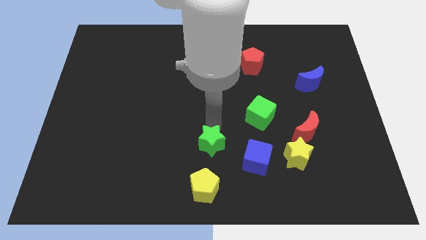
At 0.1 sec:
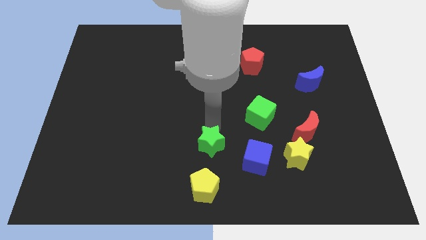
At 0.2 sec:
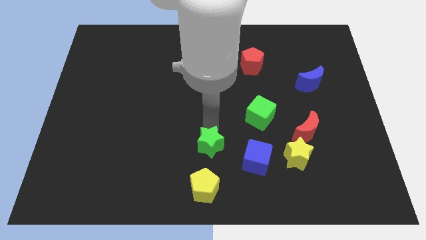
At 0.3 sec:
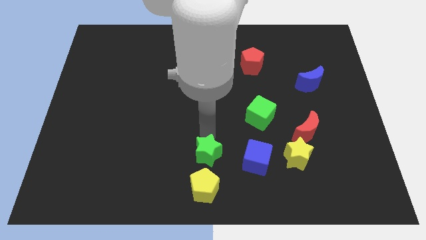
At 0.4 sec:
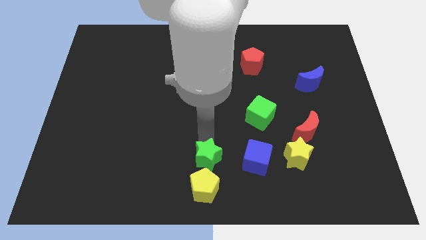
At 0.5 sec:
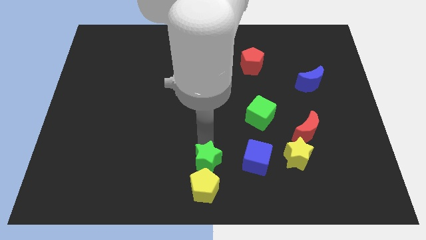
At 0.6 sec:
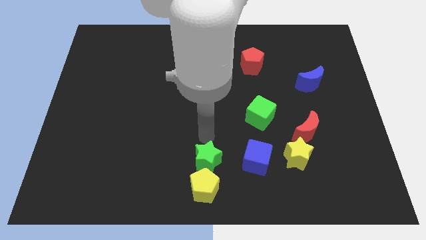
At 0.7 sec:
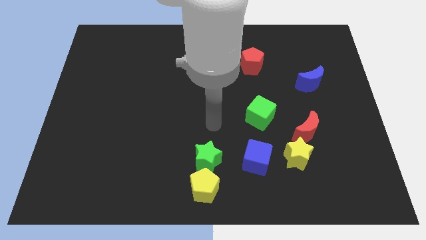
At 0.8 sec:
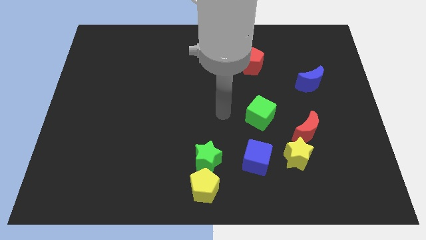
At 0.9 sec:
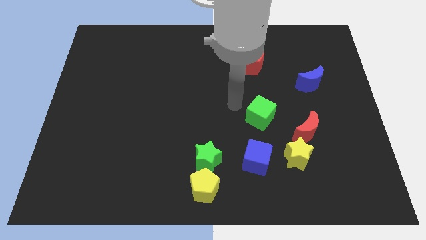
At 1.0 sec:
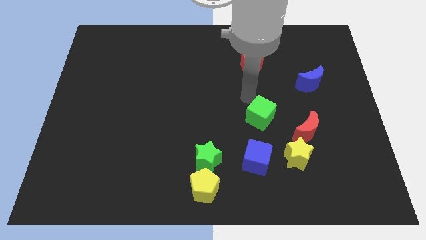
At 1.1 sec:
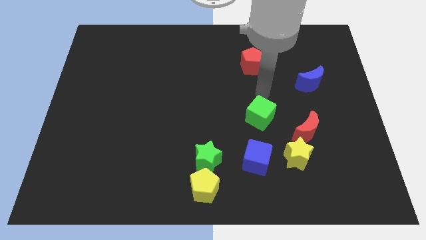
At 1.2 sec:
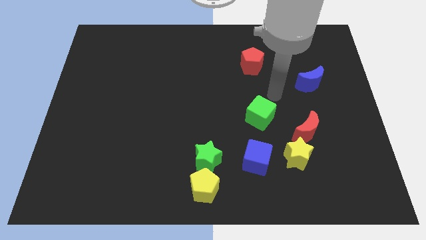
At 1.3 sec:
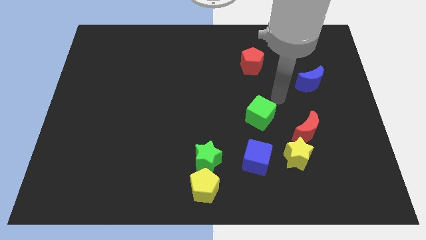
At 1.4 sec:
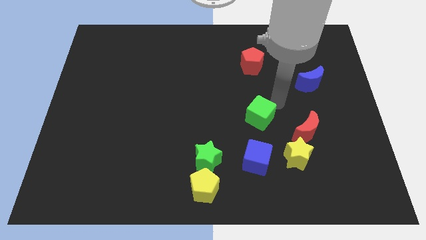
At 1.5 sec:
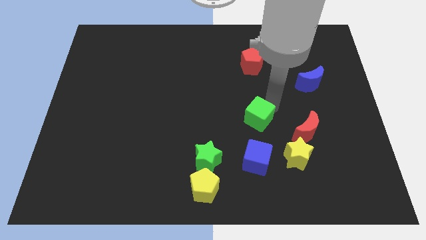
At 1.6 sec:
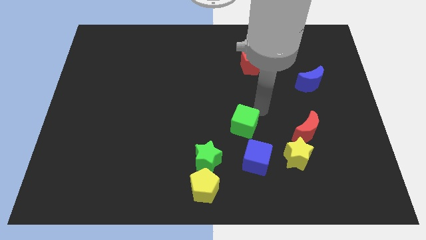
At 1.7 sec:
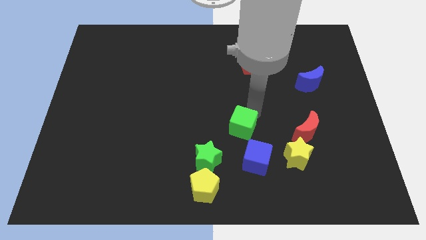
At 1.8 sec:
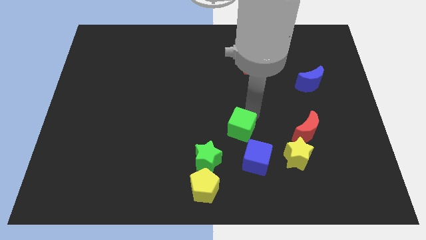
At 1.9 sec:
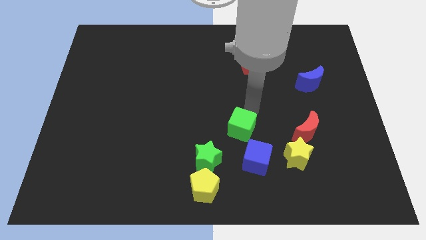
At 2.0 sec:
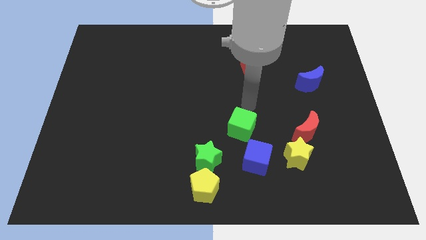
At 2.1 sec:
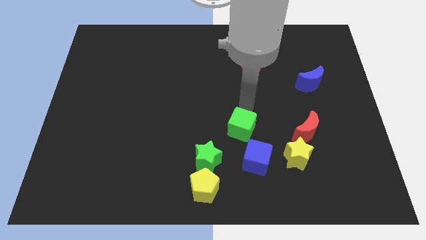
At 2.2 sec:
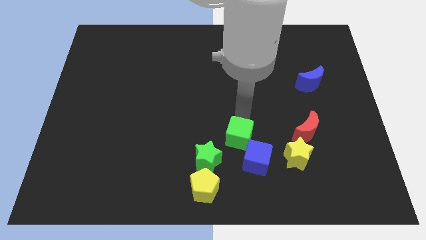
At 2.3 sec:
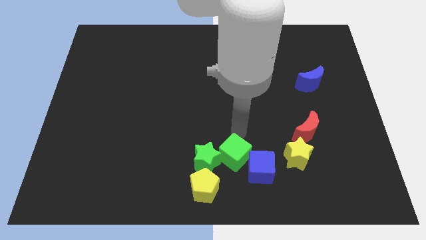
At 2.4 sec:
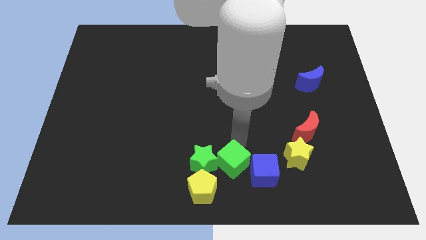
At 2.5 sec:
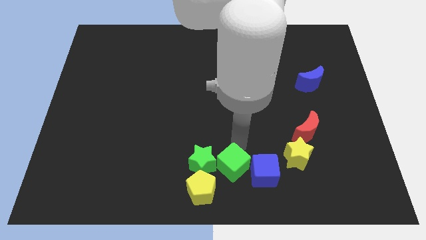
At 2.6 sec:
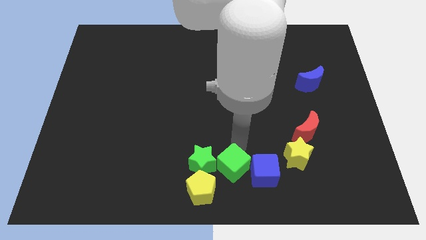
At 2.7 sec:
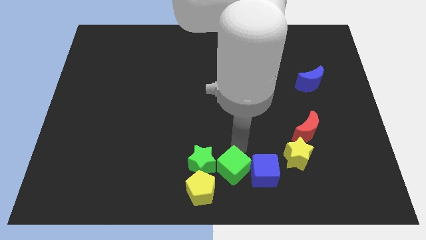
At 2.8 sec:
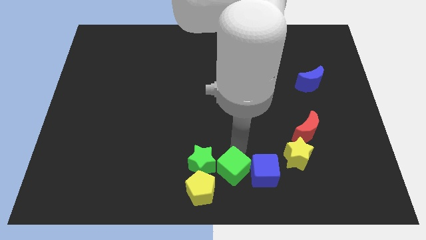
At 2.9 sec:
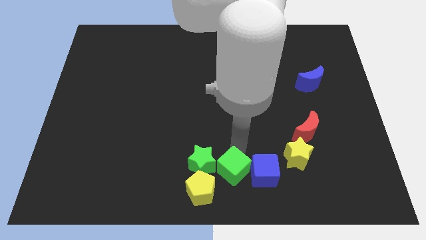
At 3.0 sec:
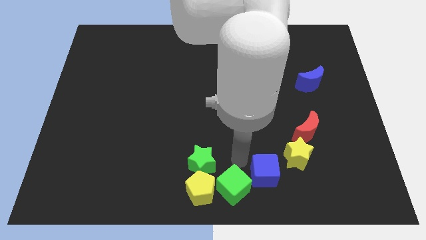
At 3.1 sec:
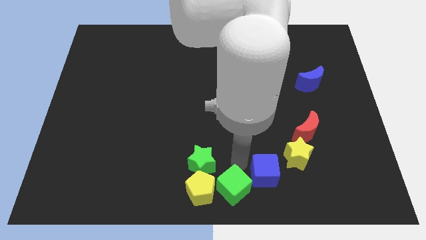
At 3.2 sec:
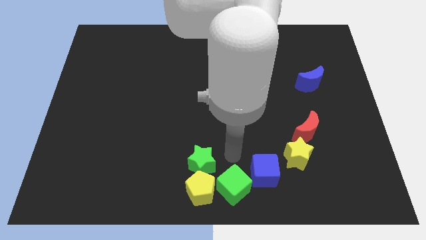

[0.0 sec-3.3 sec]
push green cube beside yellow pentagon

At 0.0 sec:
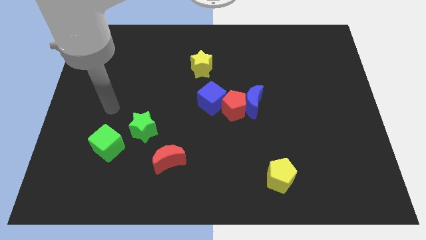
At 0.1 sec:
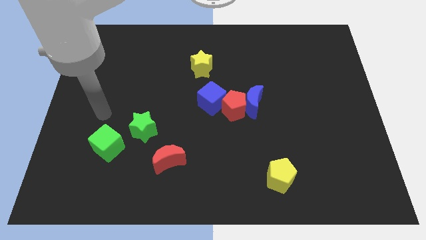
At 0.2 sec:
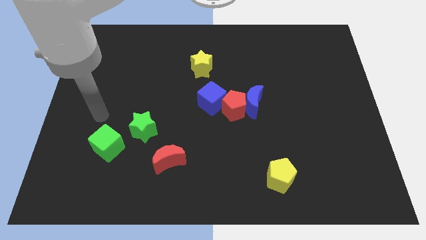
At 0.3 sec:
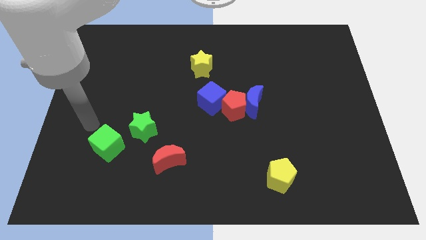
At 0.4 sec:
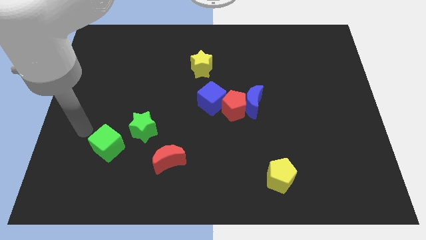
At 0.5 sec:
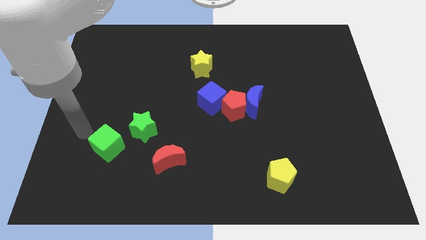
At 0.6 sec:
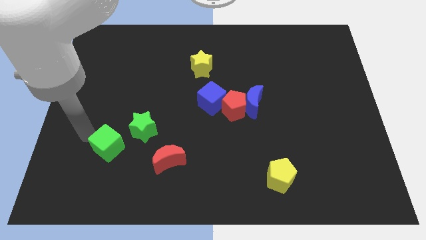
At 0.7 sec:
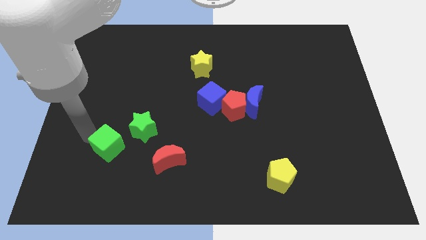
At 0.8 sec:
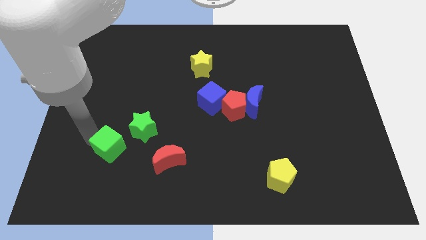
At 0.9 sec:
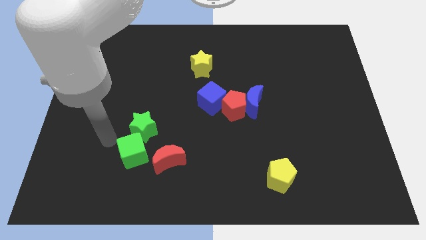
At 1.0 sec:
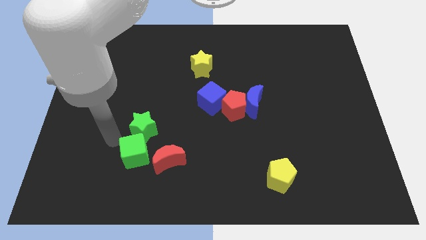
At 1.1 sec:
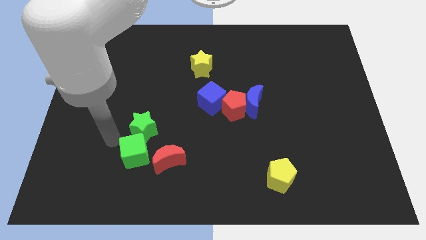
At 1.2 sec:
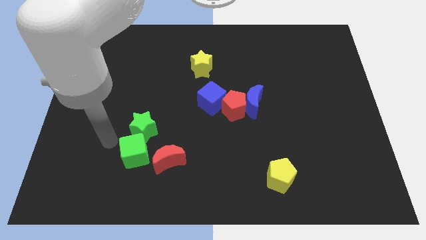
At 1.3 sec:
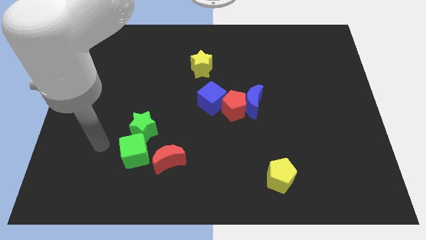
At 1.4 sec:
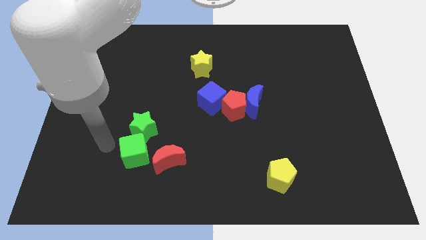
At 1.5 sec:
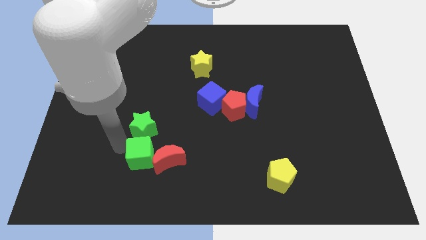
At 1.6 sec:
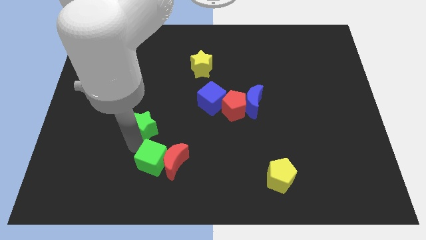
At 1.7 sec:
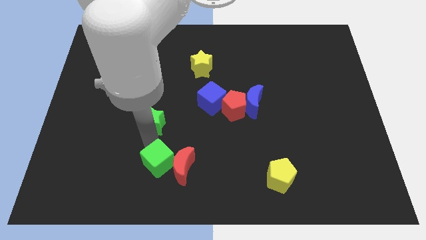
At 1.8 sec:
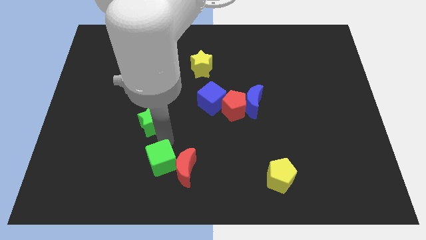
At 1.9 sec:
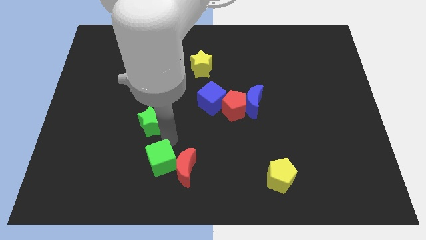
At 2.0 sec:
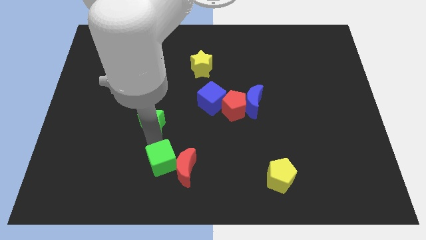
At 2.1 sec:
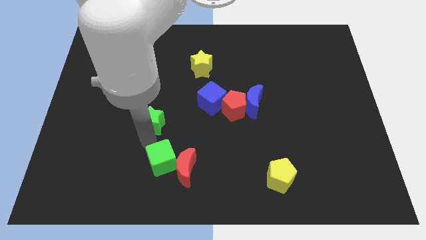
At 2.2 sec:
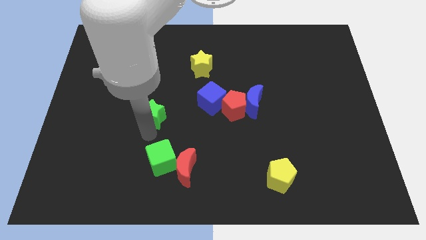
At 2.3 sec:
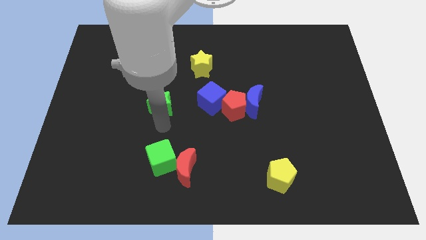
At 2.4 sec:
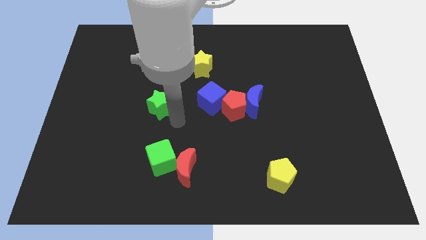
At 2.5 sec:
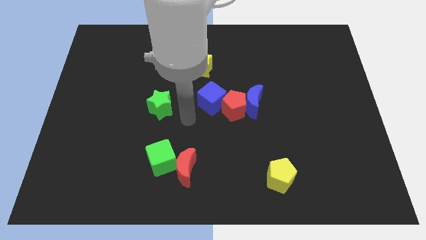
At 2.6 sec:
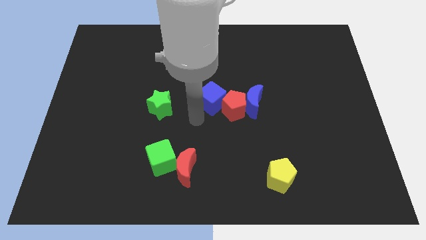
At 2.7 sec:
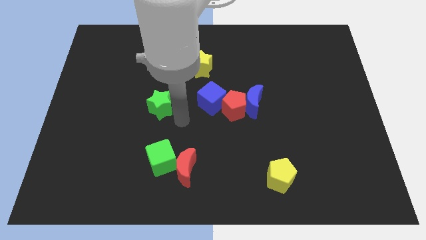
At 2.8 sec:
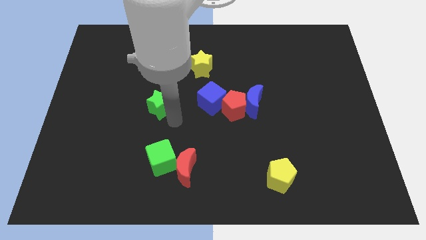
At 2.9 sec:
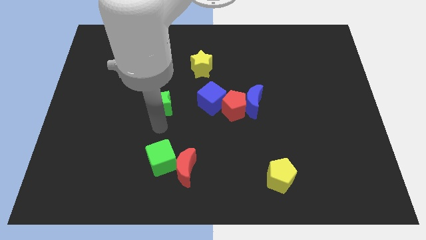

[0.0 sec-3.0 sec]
move green cube left beside the red moon

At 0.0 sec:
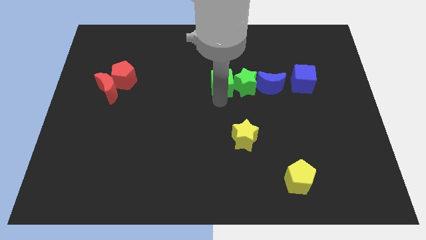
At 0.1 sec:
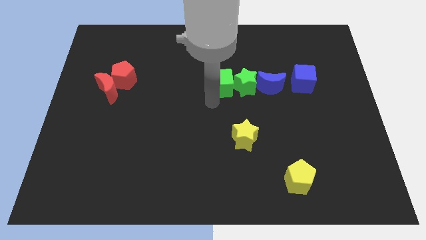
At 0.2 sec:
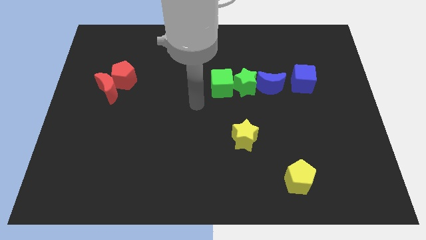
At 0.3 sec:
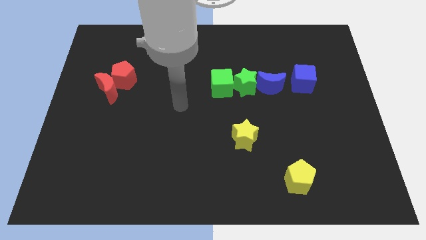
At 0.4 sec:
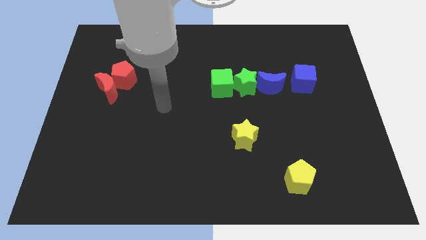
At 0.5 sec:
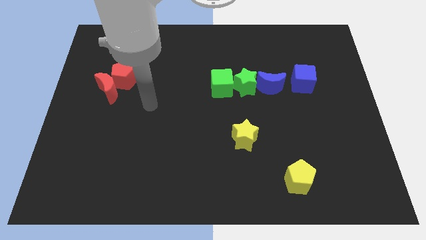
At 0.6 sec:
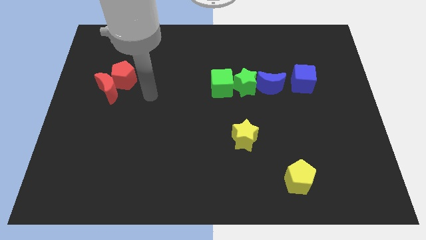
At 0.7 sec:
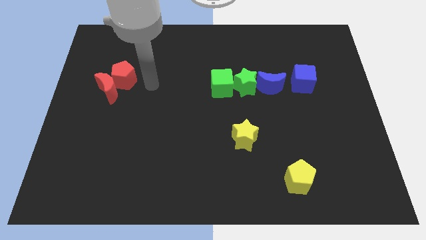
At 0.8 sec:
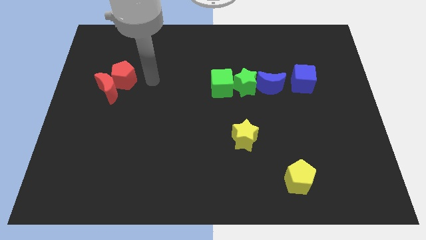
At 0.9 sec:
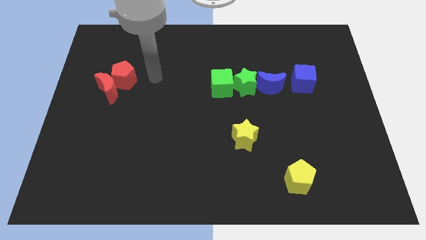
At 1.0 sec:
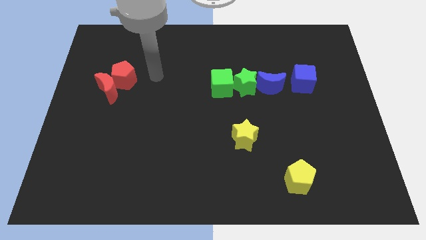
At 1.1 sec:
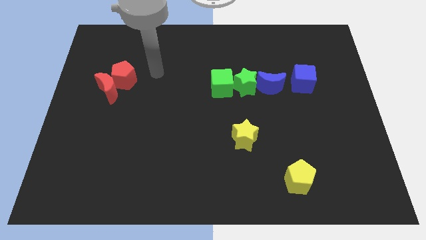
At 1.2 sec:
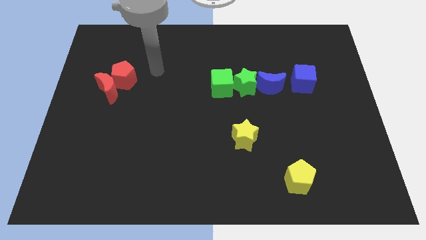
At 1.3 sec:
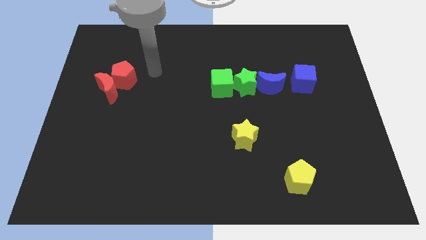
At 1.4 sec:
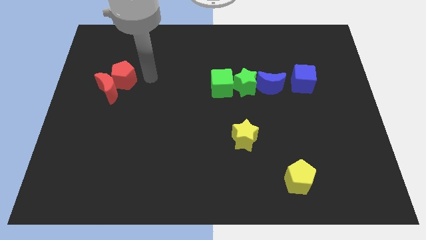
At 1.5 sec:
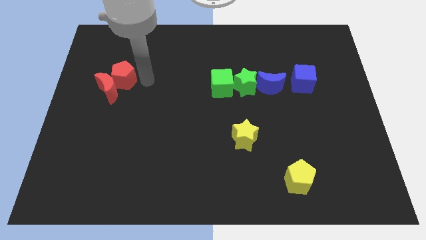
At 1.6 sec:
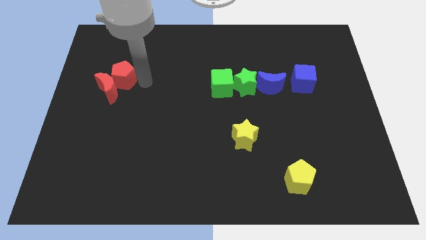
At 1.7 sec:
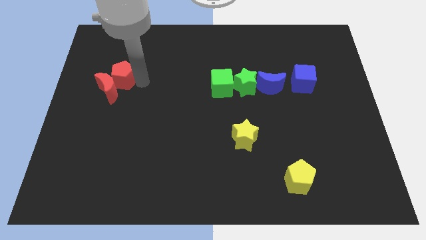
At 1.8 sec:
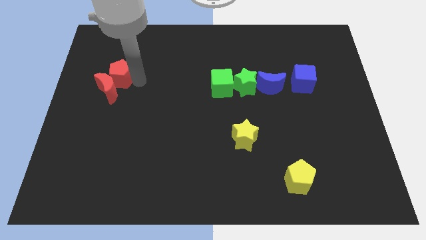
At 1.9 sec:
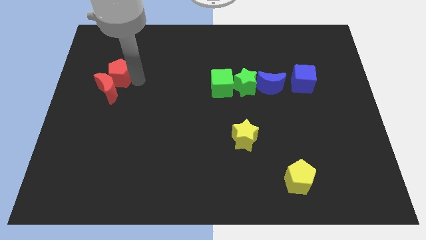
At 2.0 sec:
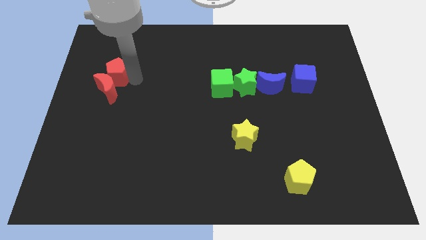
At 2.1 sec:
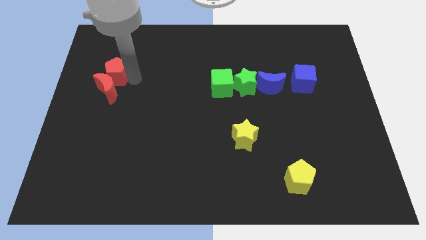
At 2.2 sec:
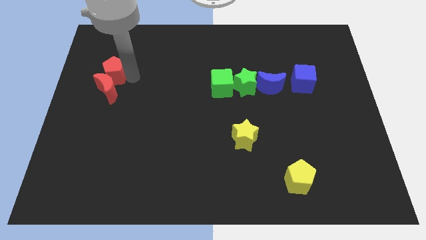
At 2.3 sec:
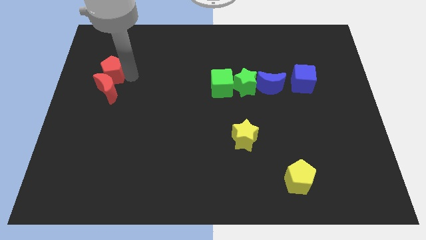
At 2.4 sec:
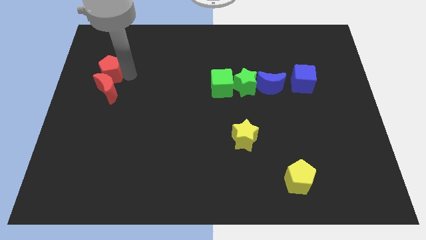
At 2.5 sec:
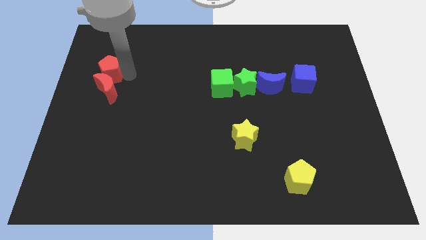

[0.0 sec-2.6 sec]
place red pentagon to the top of red moon
